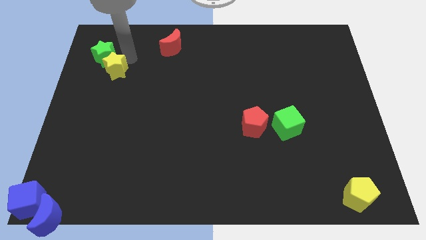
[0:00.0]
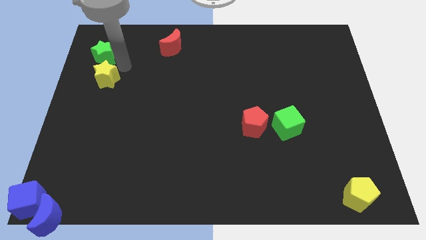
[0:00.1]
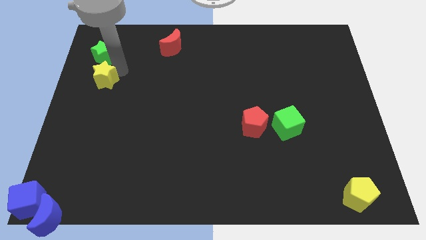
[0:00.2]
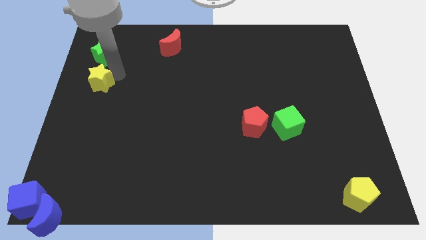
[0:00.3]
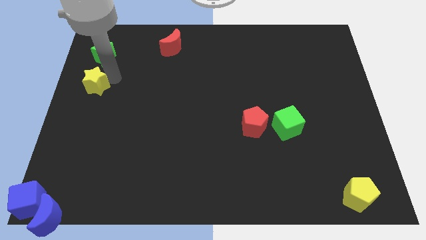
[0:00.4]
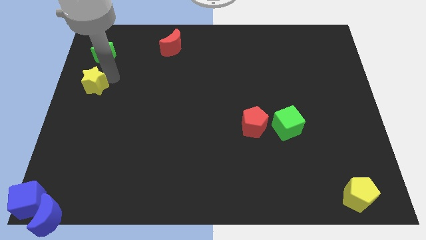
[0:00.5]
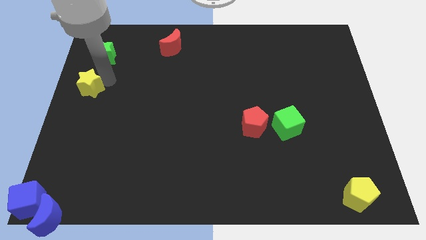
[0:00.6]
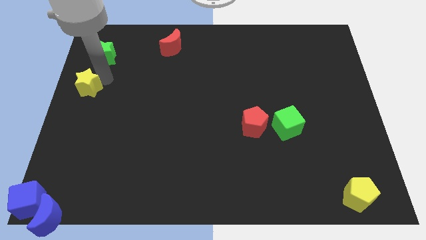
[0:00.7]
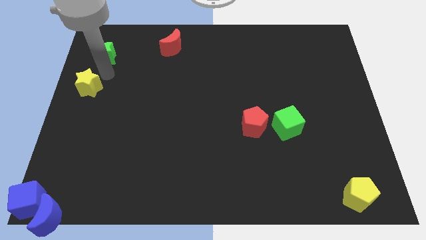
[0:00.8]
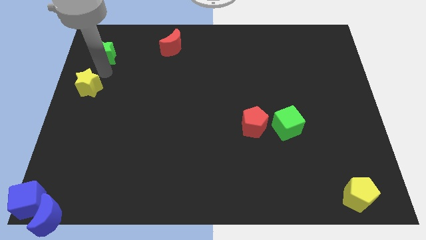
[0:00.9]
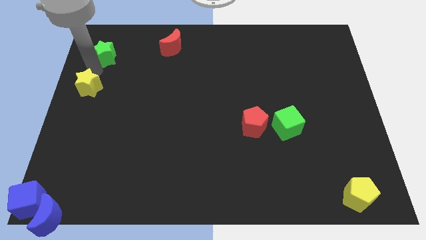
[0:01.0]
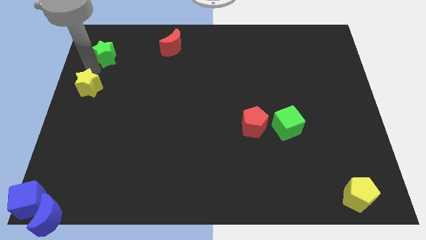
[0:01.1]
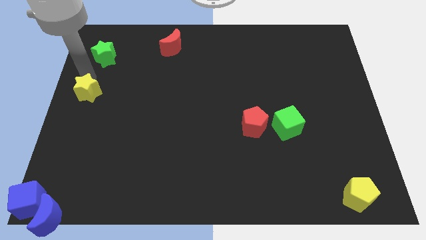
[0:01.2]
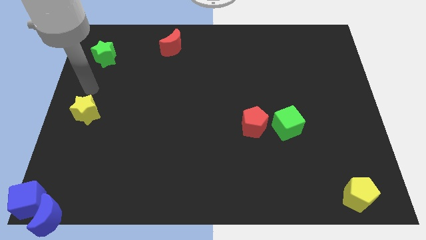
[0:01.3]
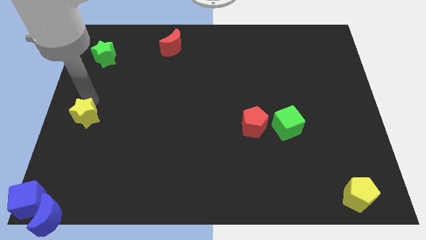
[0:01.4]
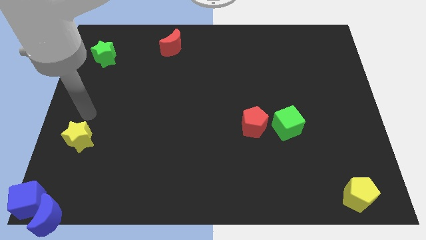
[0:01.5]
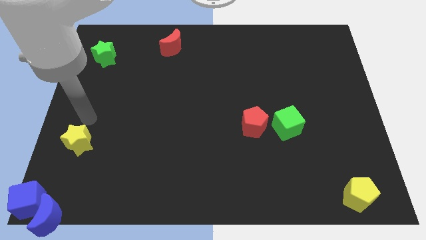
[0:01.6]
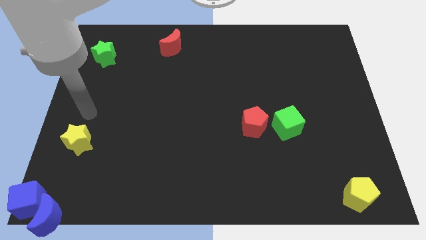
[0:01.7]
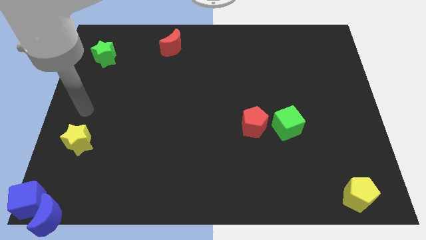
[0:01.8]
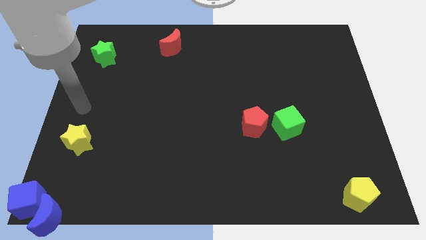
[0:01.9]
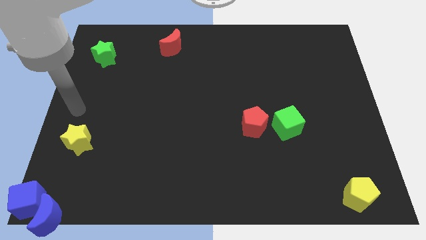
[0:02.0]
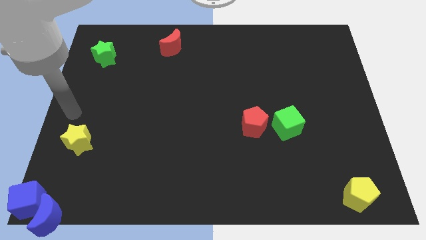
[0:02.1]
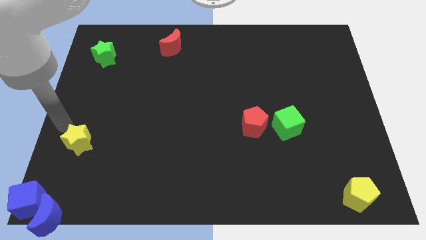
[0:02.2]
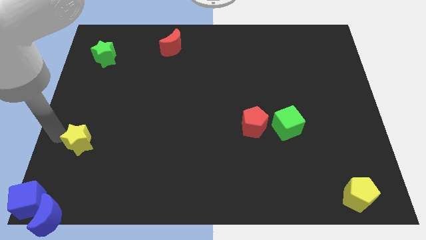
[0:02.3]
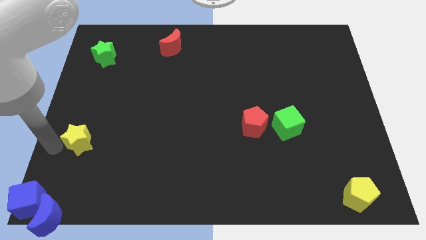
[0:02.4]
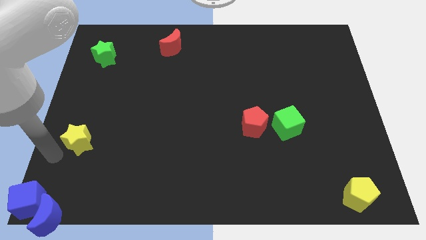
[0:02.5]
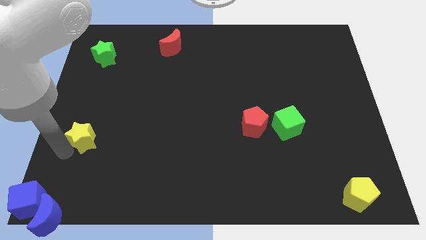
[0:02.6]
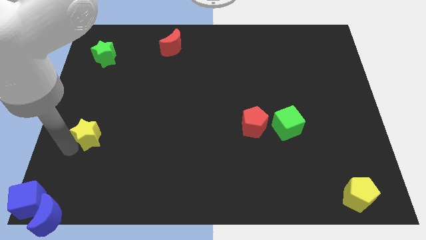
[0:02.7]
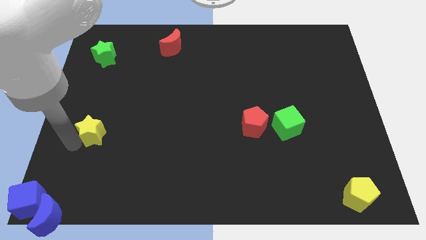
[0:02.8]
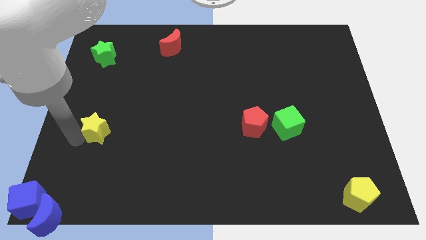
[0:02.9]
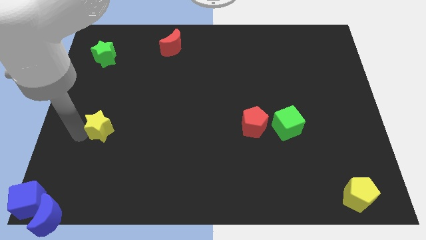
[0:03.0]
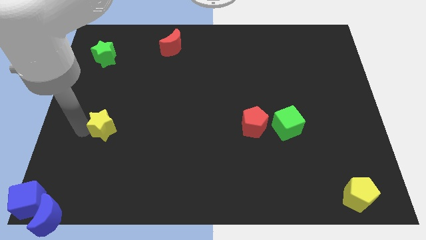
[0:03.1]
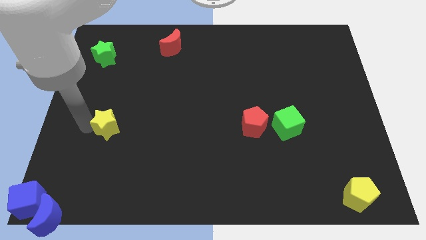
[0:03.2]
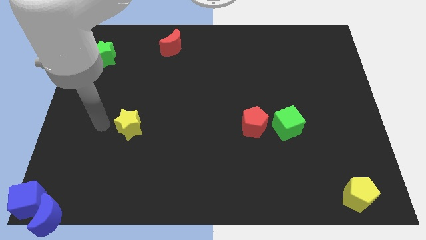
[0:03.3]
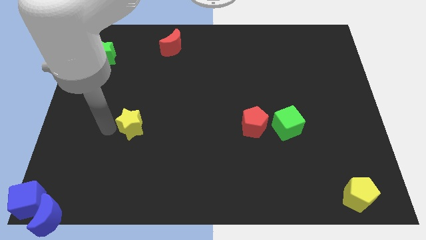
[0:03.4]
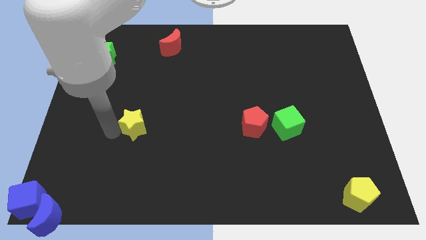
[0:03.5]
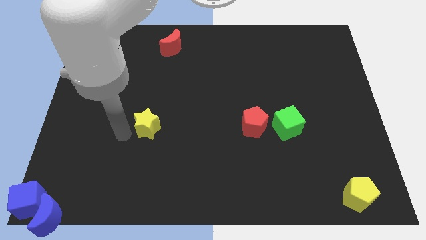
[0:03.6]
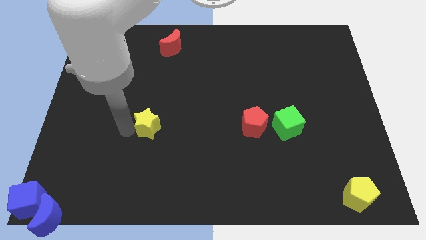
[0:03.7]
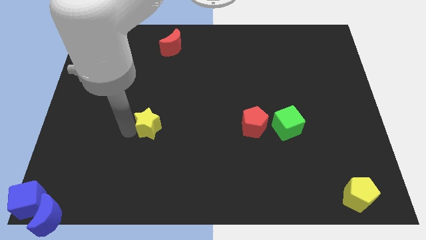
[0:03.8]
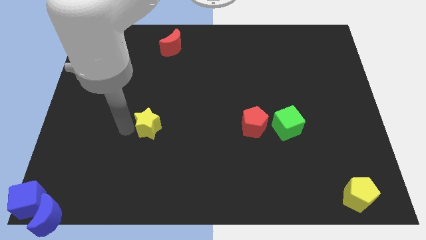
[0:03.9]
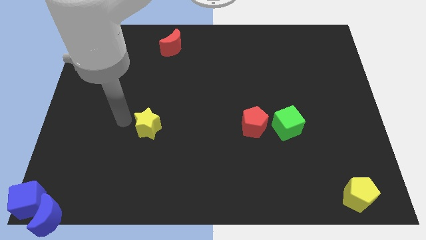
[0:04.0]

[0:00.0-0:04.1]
move the yellow star to the left of the red pentagon

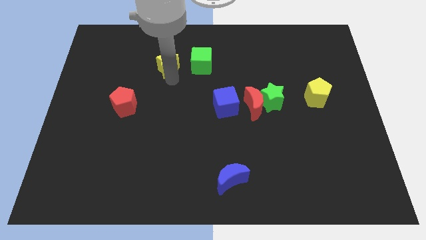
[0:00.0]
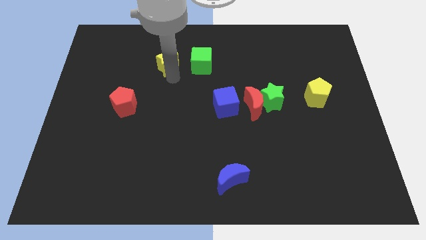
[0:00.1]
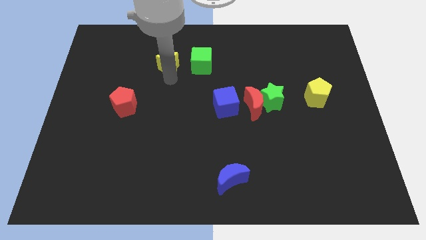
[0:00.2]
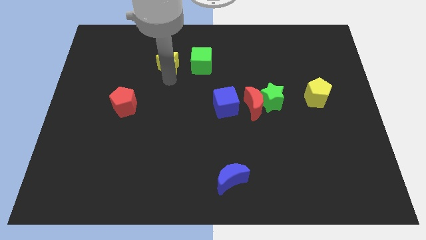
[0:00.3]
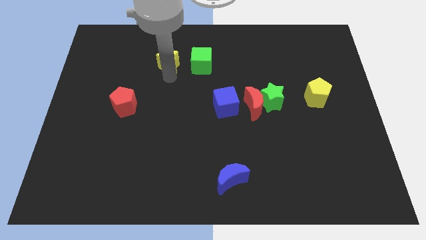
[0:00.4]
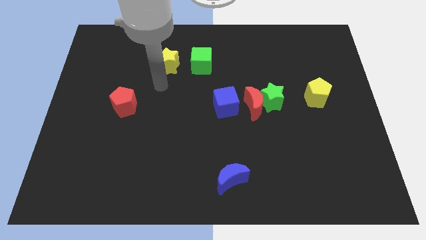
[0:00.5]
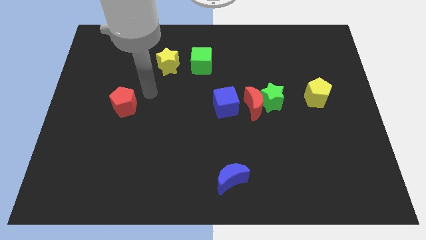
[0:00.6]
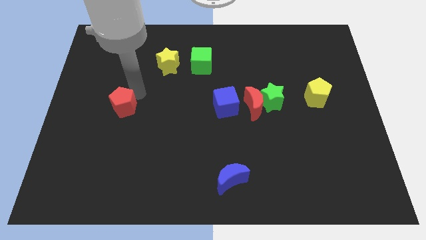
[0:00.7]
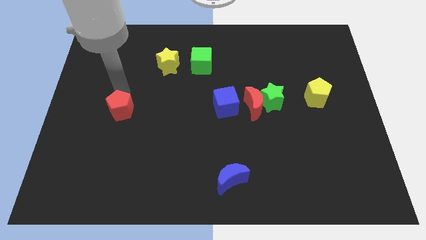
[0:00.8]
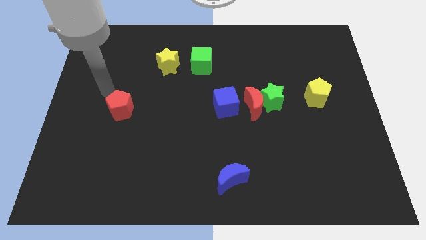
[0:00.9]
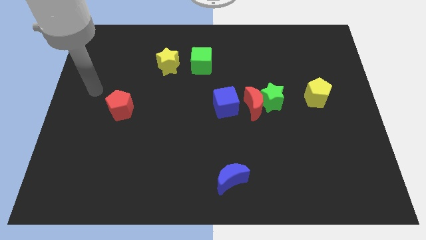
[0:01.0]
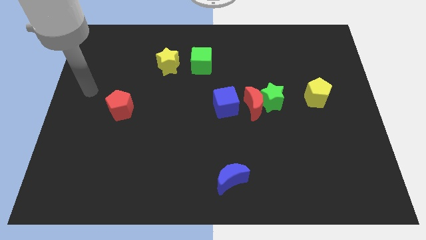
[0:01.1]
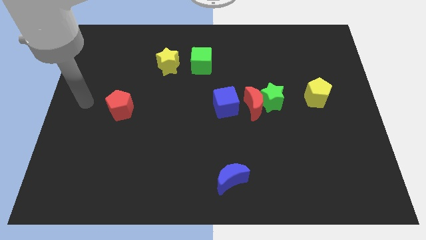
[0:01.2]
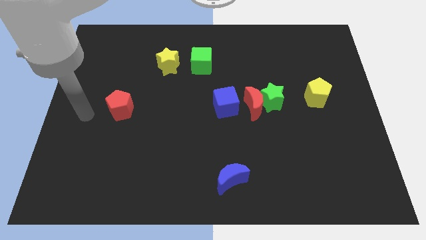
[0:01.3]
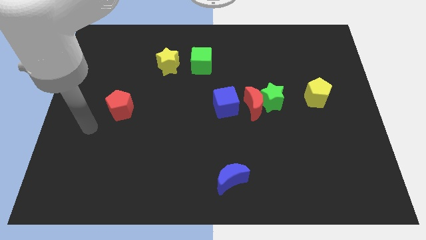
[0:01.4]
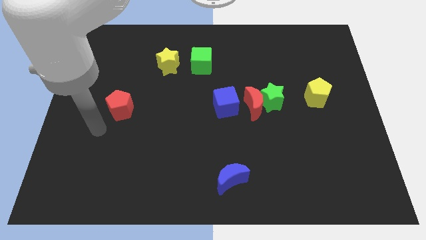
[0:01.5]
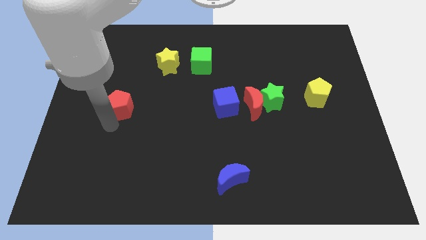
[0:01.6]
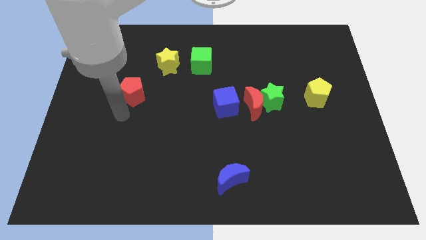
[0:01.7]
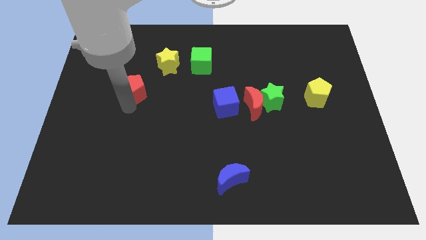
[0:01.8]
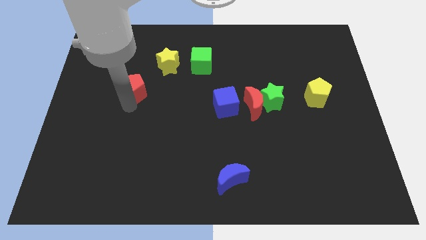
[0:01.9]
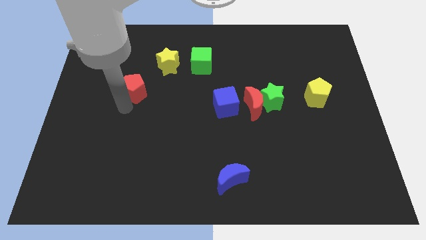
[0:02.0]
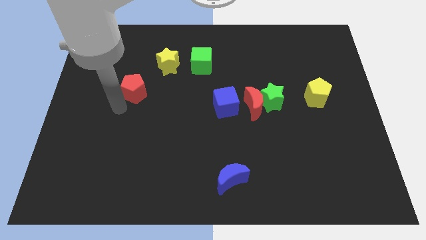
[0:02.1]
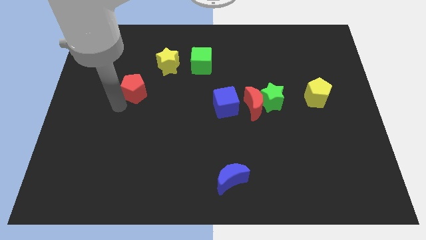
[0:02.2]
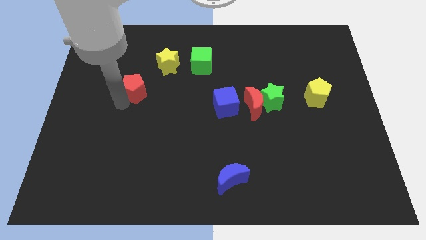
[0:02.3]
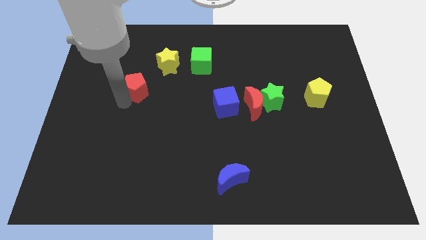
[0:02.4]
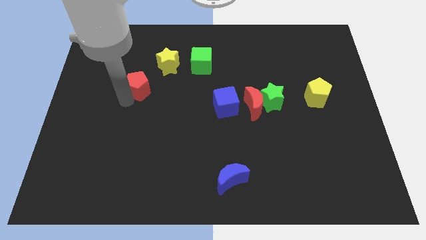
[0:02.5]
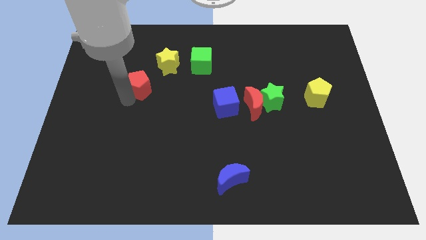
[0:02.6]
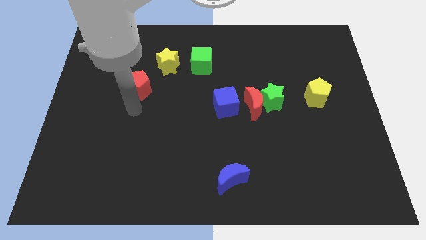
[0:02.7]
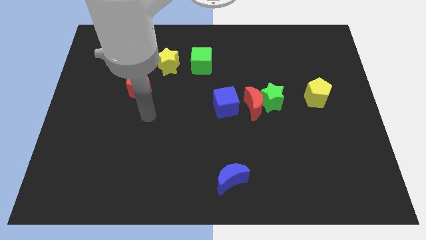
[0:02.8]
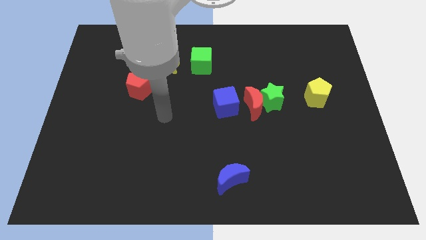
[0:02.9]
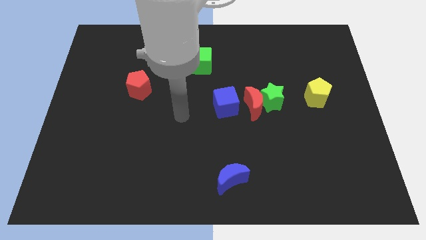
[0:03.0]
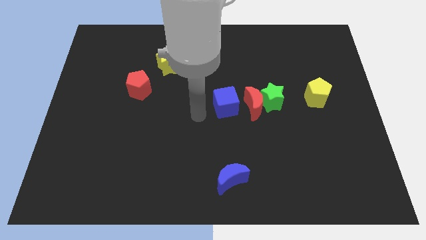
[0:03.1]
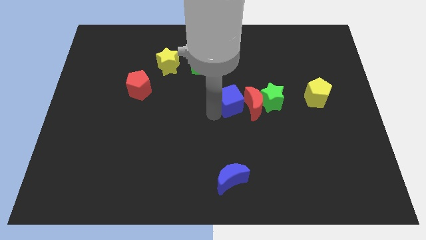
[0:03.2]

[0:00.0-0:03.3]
push the red pentagon towards the yellow star and move away

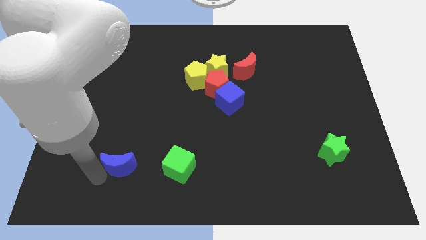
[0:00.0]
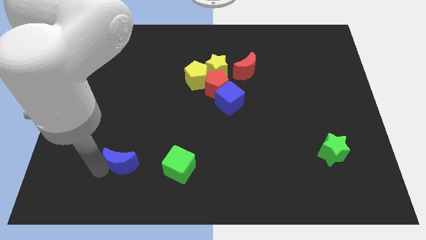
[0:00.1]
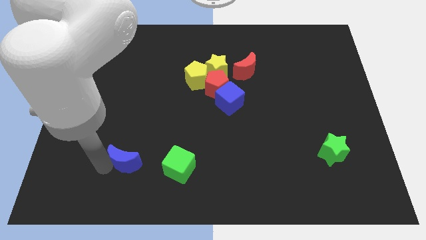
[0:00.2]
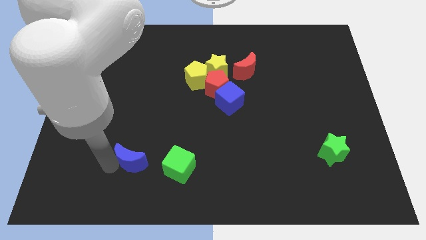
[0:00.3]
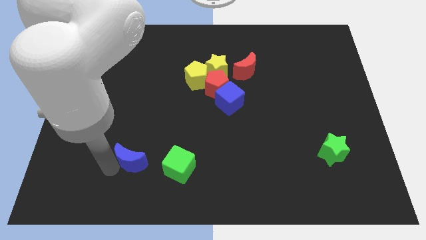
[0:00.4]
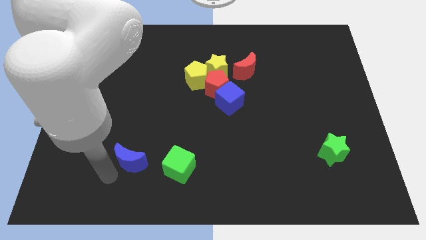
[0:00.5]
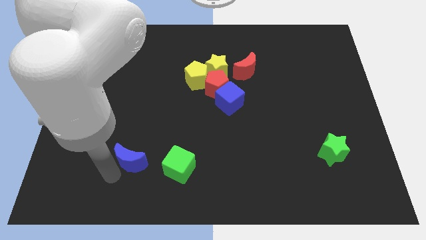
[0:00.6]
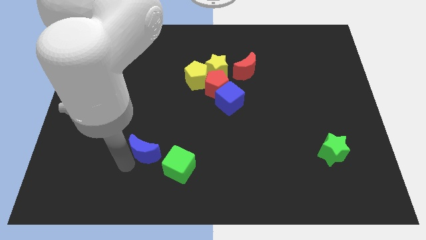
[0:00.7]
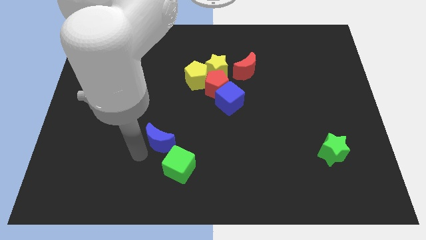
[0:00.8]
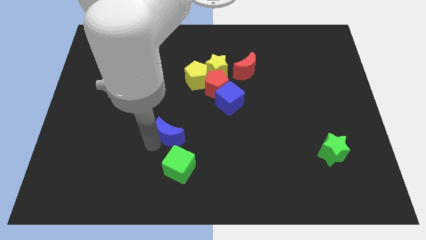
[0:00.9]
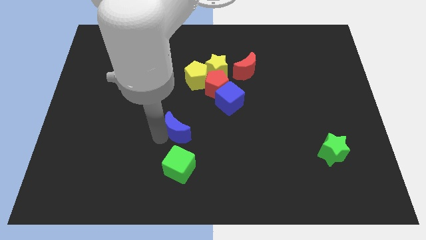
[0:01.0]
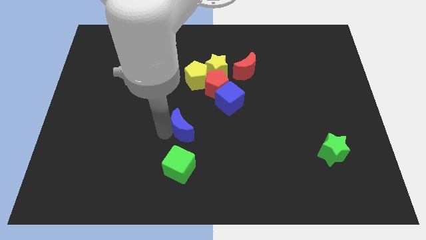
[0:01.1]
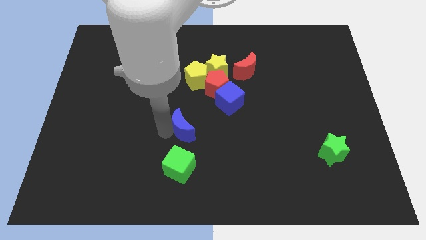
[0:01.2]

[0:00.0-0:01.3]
move the blue moon above the green cube

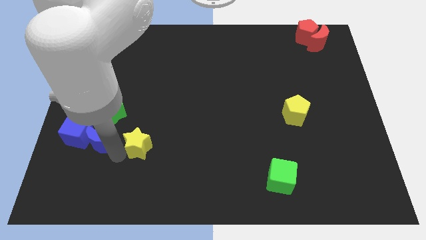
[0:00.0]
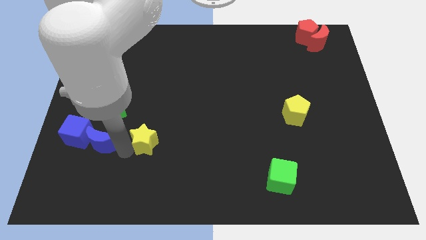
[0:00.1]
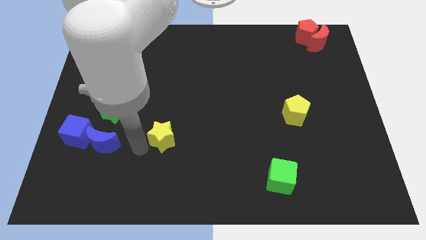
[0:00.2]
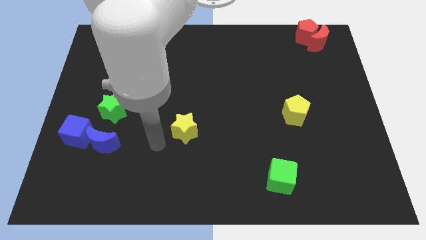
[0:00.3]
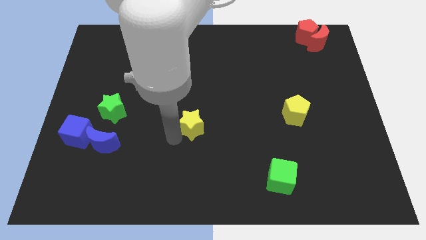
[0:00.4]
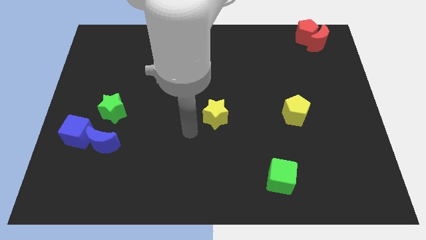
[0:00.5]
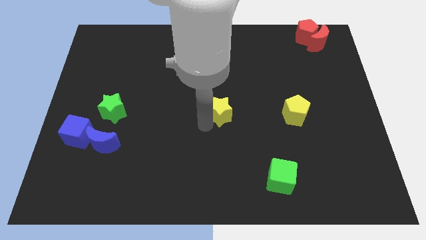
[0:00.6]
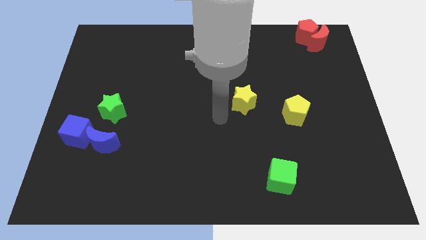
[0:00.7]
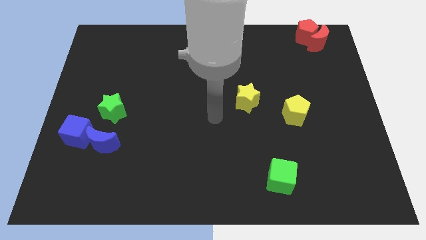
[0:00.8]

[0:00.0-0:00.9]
move away the yellow star from the blue moon
